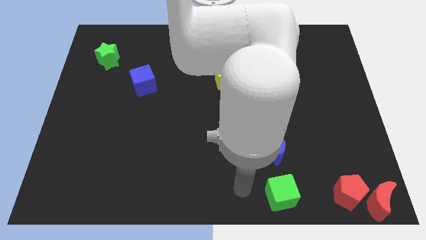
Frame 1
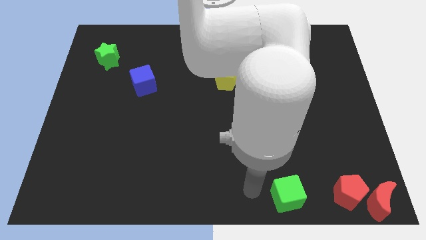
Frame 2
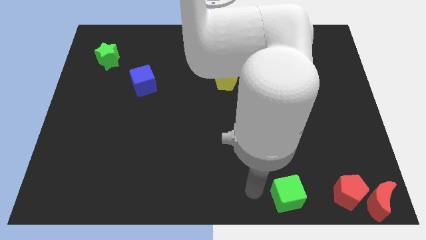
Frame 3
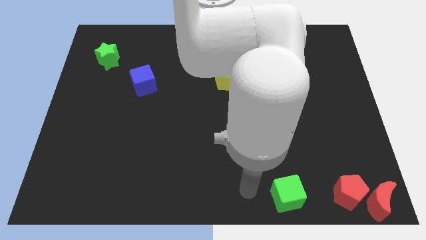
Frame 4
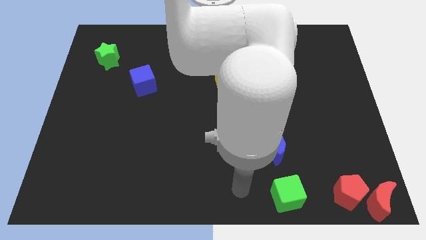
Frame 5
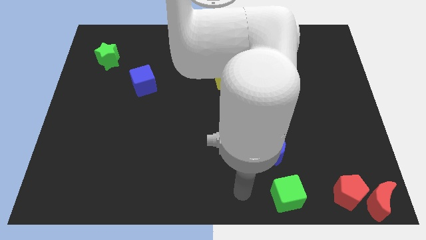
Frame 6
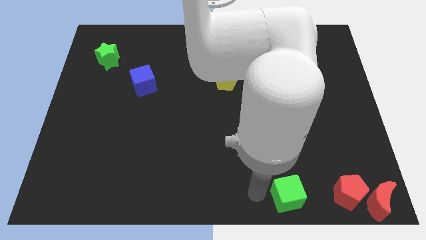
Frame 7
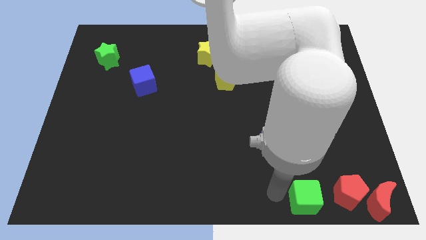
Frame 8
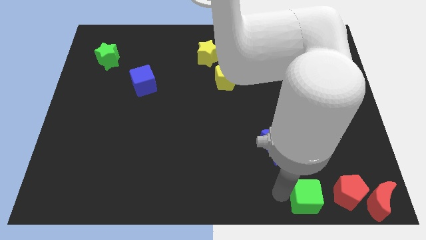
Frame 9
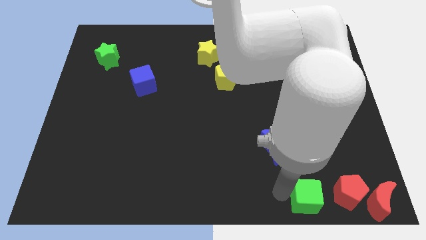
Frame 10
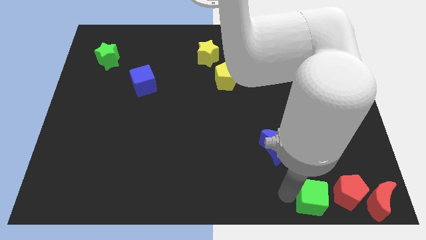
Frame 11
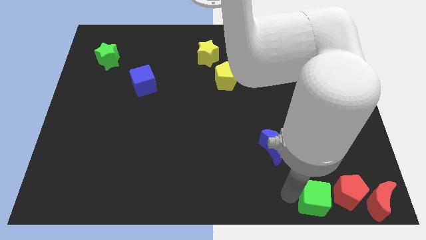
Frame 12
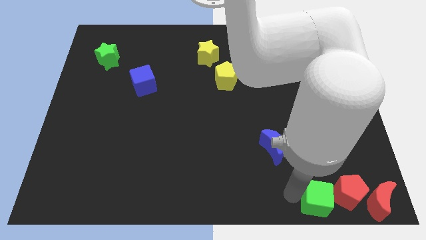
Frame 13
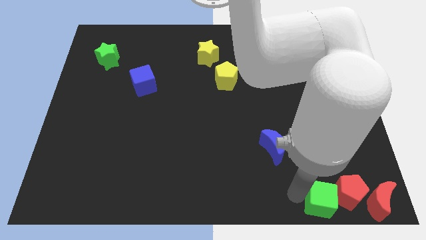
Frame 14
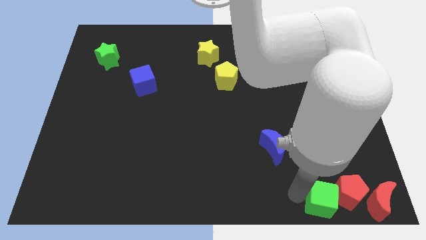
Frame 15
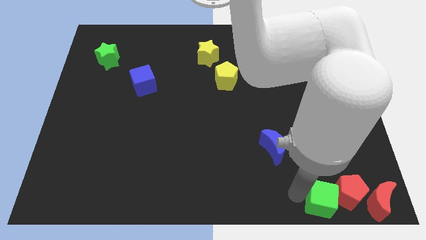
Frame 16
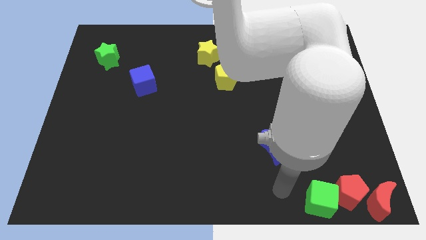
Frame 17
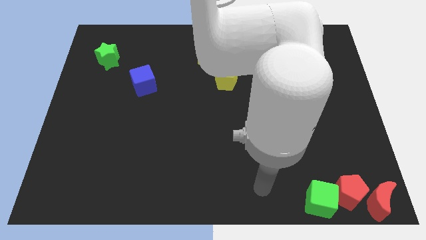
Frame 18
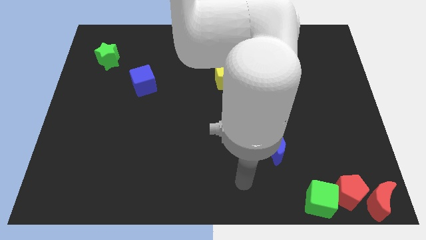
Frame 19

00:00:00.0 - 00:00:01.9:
place the green cube left to the red pentagon

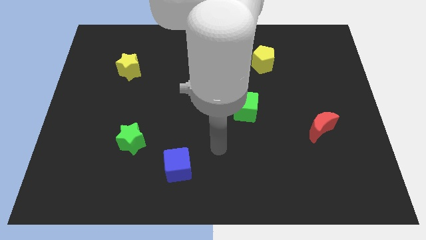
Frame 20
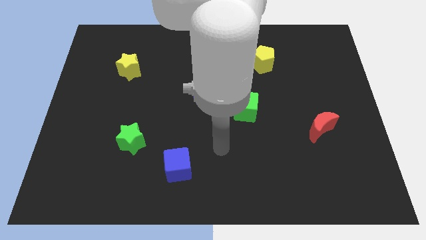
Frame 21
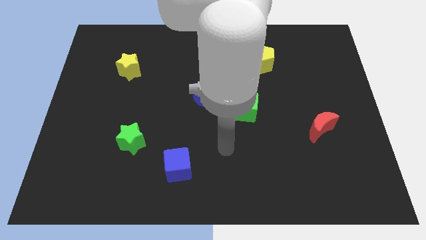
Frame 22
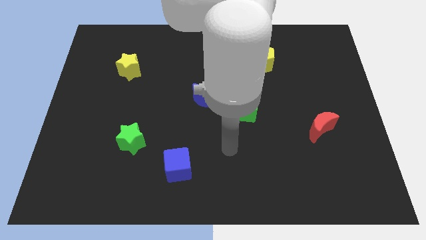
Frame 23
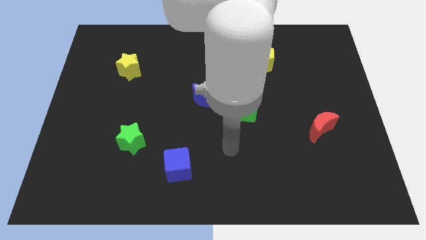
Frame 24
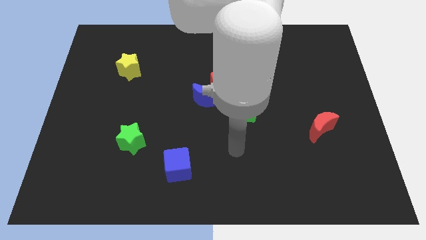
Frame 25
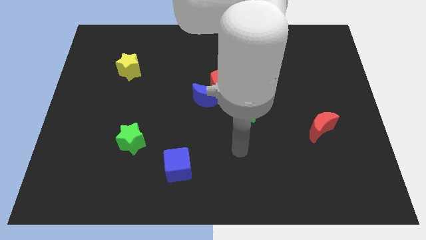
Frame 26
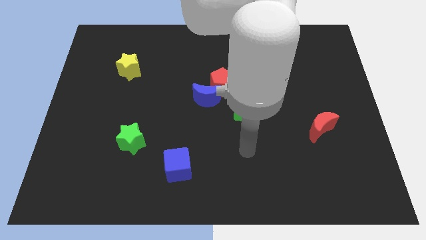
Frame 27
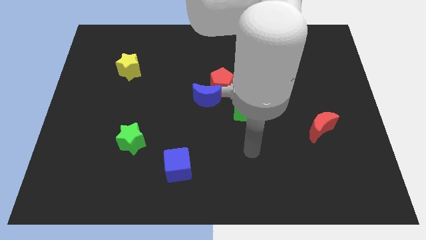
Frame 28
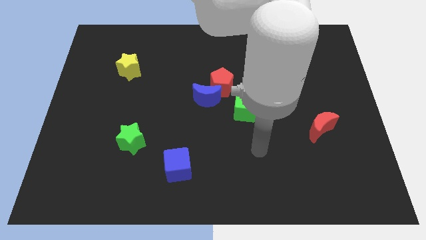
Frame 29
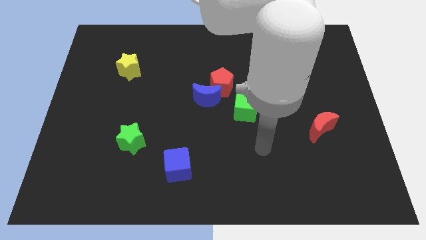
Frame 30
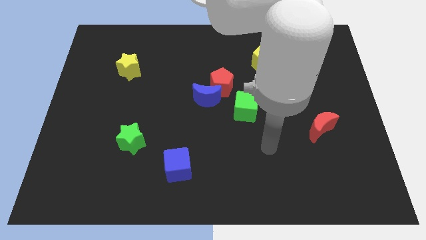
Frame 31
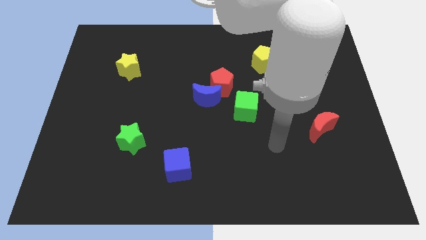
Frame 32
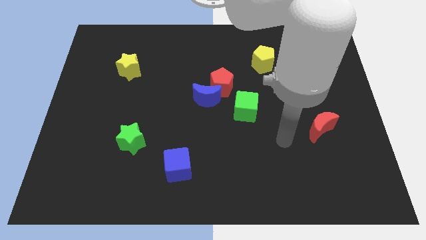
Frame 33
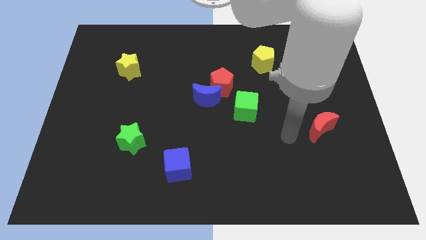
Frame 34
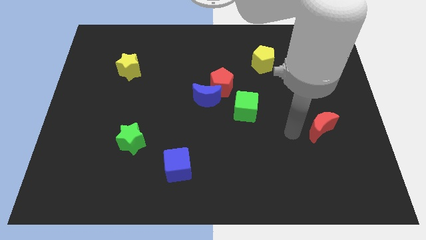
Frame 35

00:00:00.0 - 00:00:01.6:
move your hand close to the left side of the red crescent

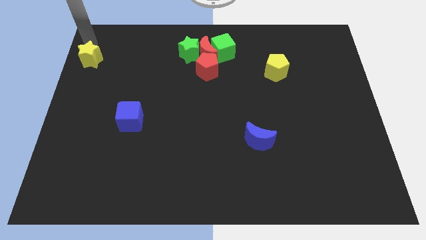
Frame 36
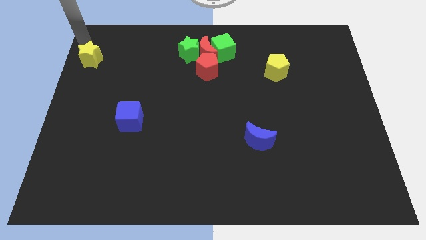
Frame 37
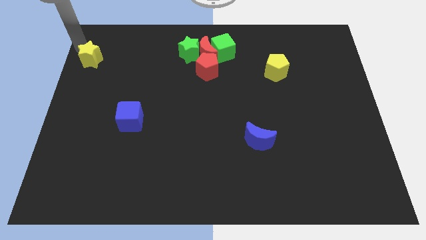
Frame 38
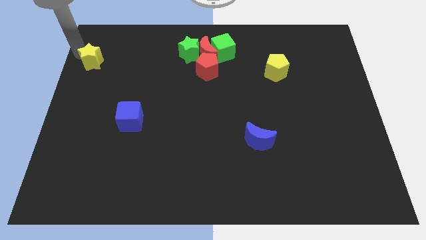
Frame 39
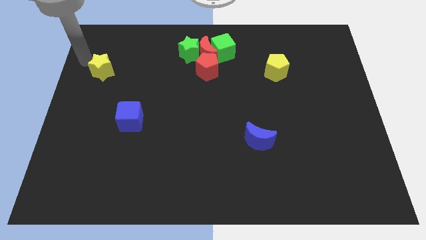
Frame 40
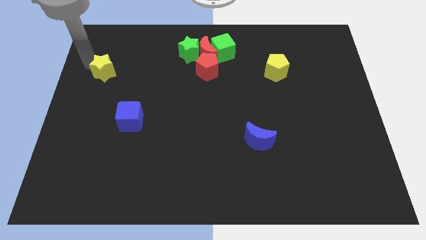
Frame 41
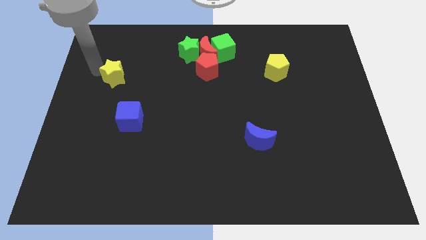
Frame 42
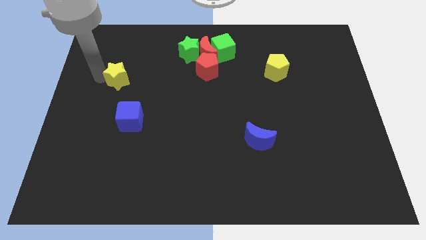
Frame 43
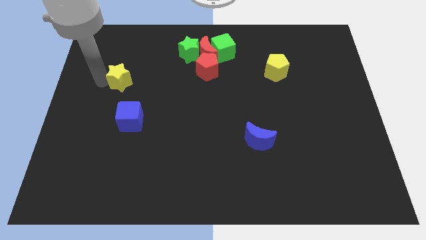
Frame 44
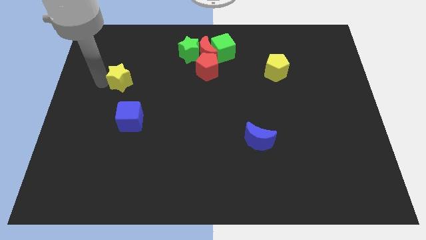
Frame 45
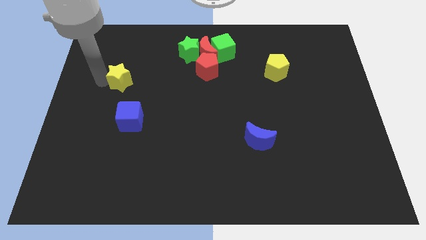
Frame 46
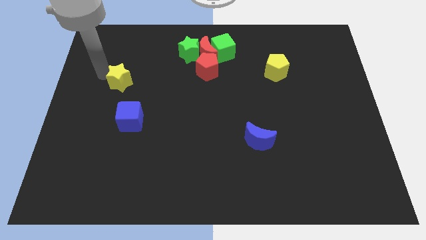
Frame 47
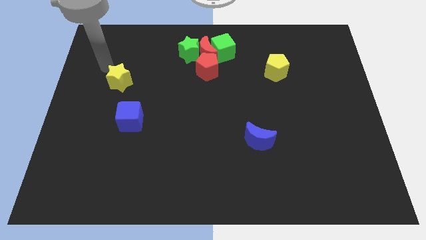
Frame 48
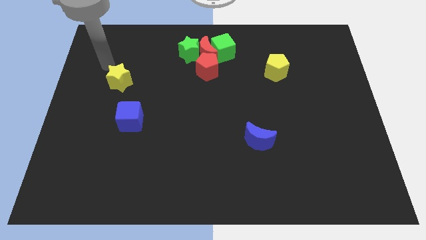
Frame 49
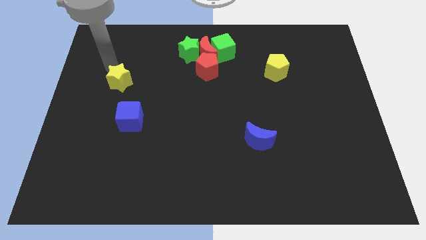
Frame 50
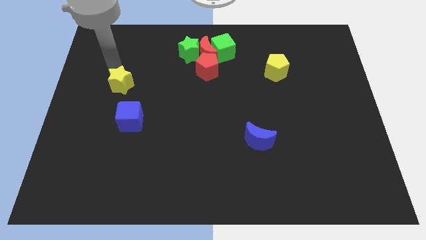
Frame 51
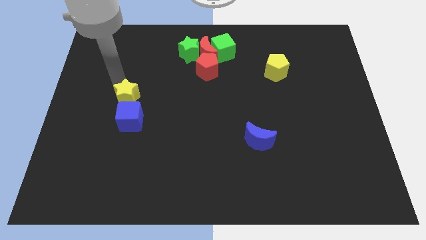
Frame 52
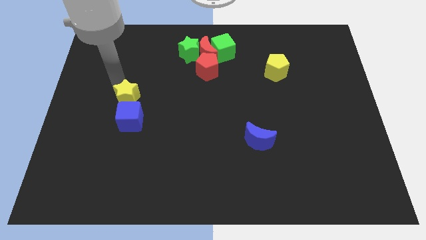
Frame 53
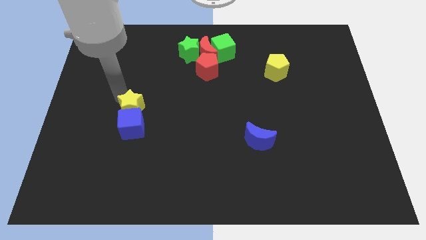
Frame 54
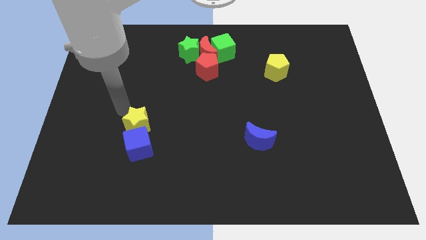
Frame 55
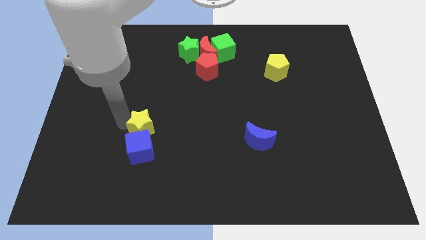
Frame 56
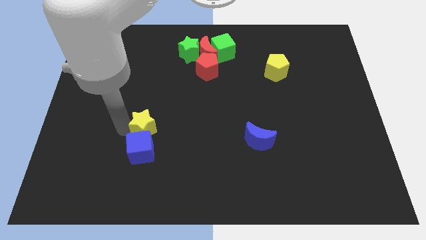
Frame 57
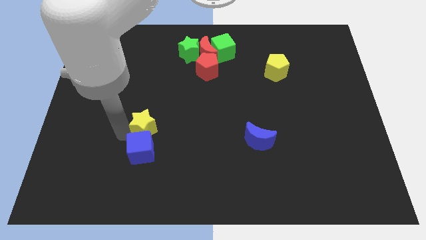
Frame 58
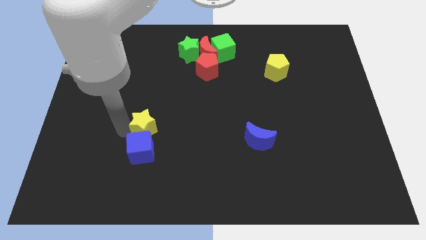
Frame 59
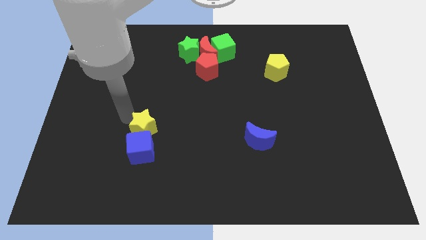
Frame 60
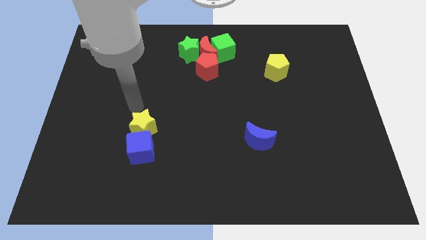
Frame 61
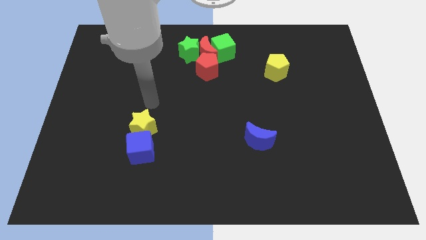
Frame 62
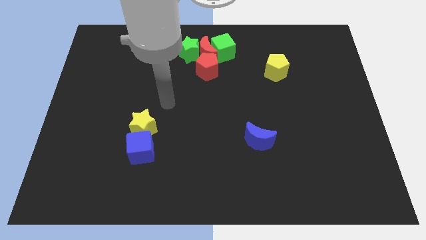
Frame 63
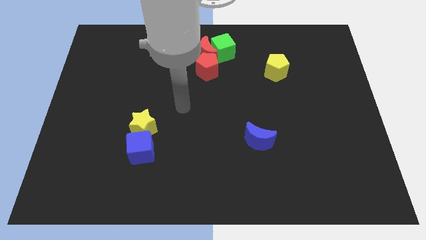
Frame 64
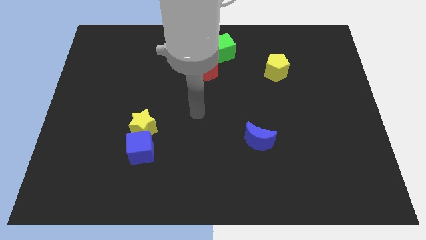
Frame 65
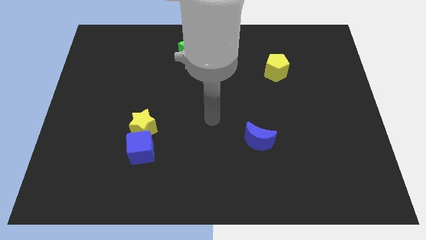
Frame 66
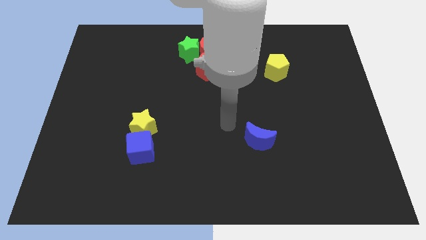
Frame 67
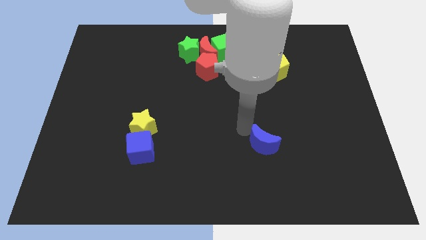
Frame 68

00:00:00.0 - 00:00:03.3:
push the yellow star into the blue cube

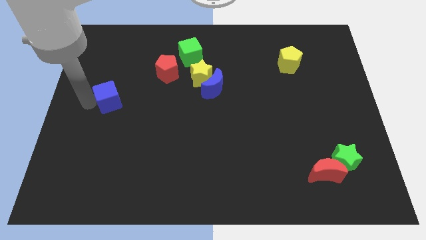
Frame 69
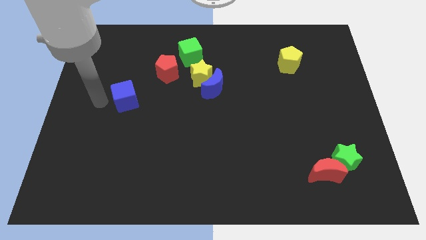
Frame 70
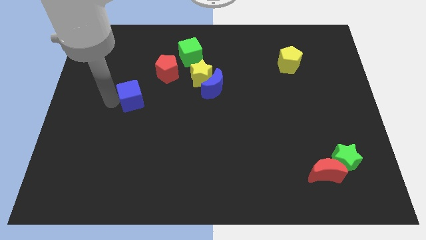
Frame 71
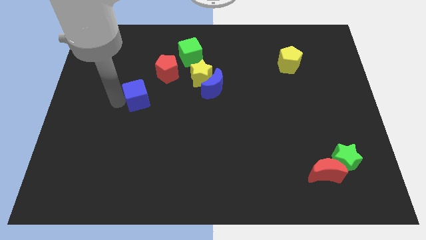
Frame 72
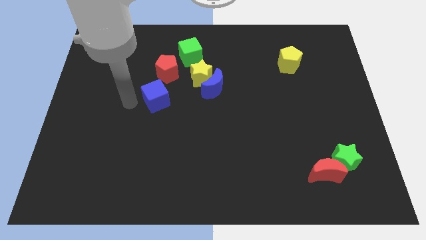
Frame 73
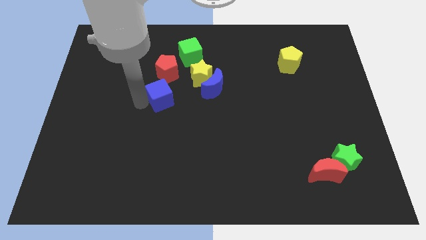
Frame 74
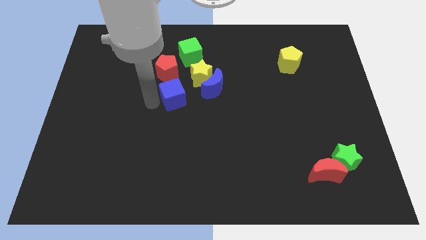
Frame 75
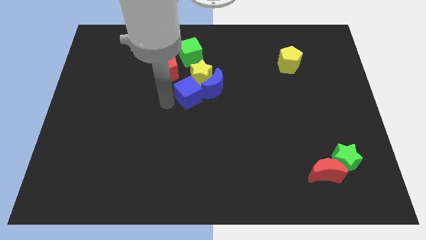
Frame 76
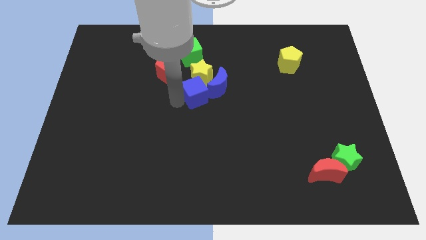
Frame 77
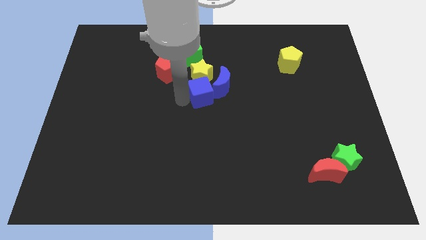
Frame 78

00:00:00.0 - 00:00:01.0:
move the blue cube to the group of object

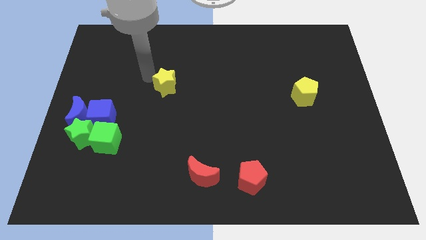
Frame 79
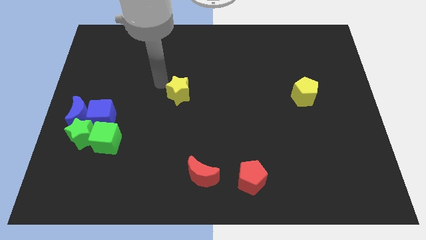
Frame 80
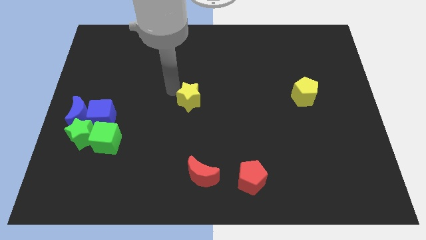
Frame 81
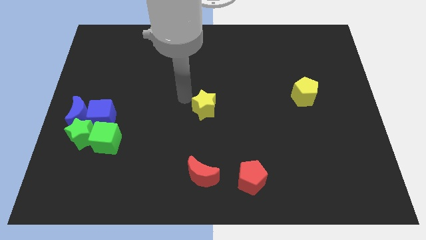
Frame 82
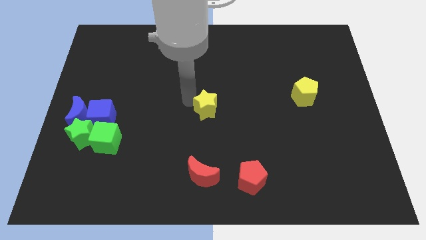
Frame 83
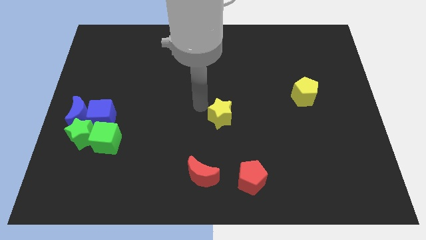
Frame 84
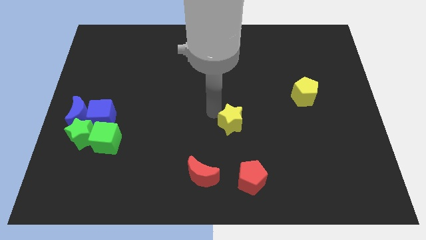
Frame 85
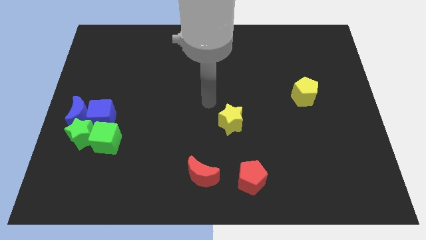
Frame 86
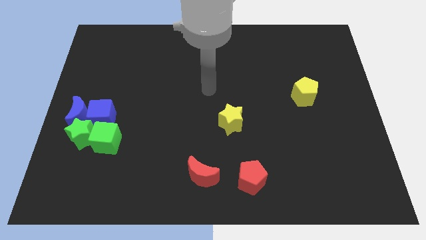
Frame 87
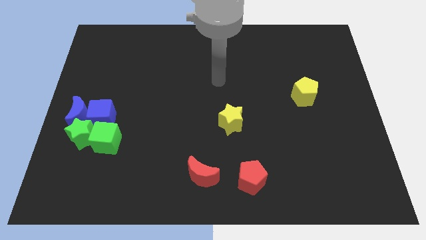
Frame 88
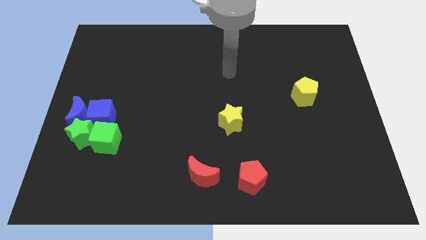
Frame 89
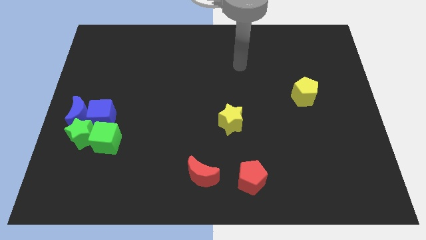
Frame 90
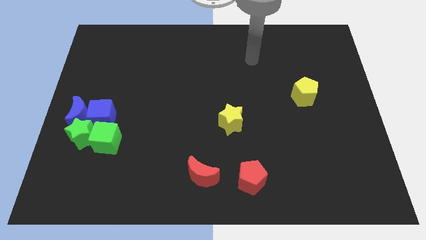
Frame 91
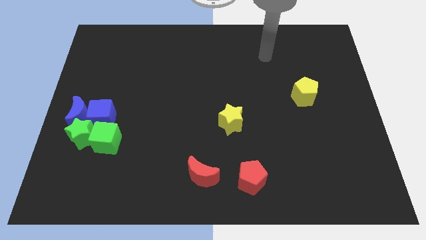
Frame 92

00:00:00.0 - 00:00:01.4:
place the yellow star to the center of the board
